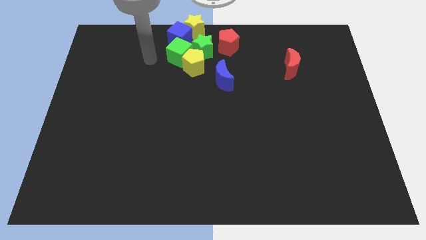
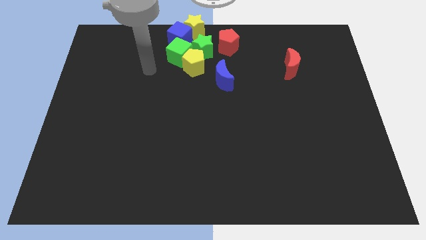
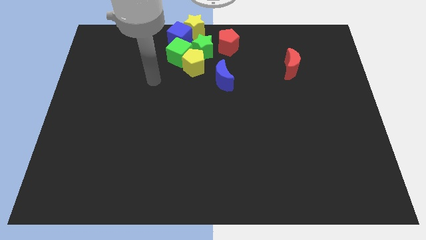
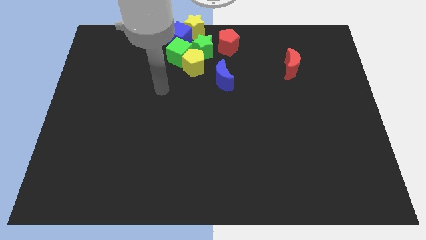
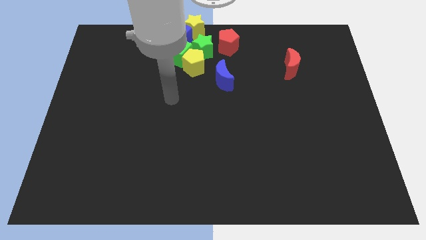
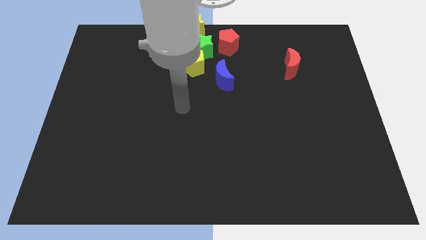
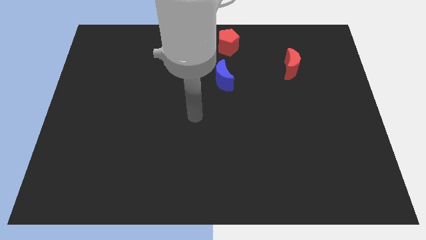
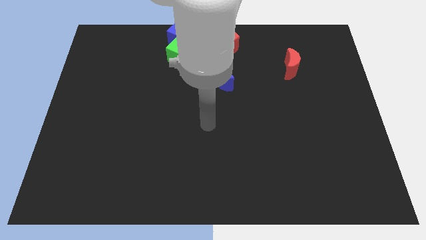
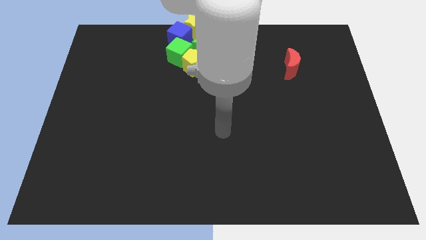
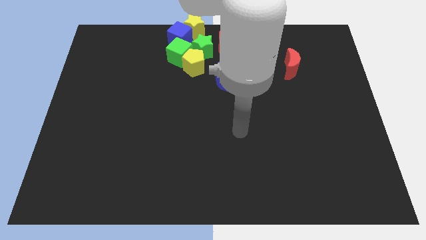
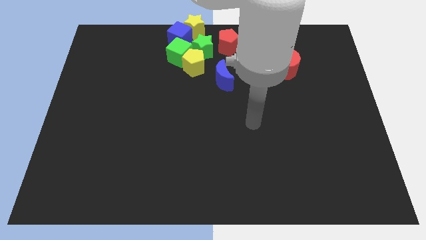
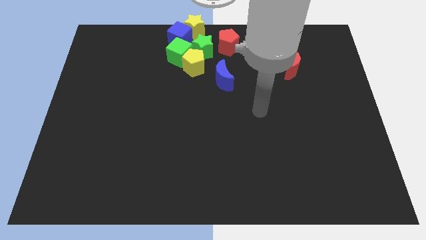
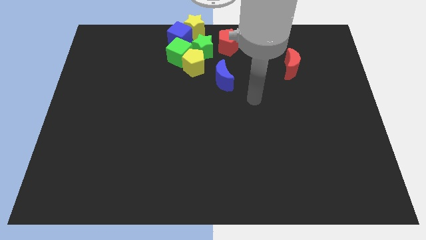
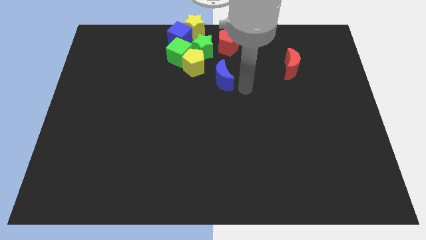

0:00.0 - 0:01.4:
move your arm away from the green cube

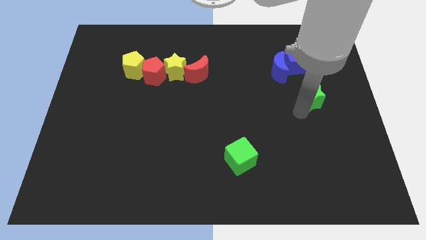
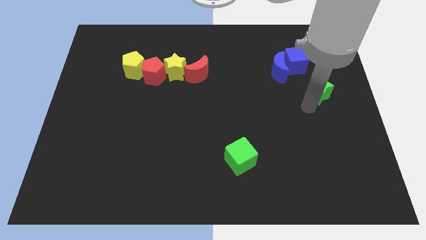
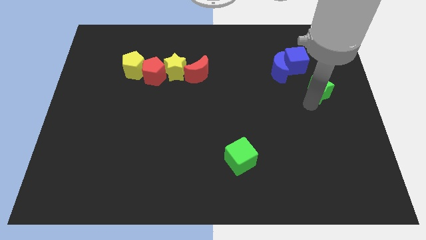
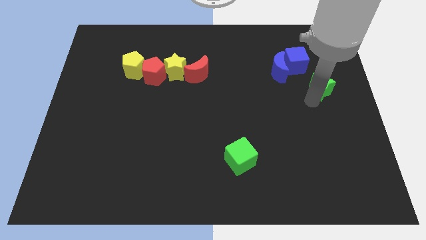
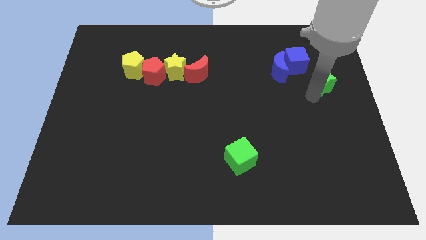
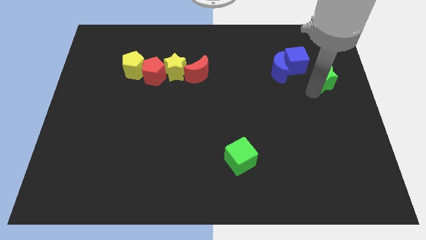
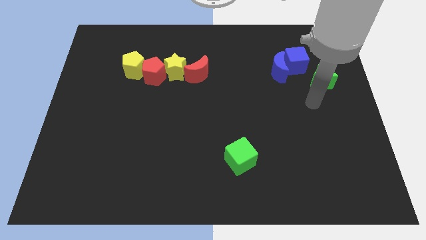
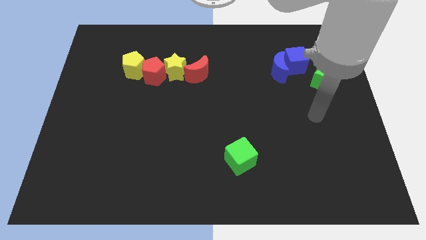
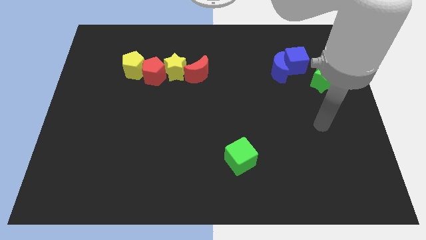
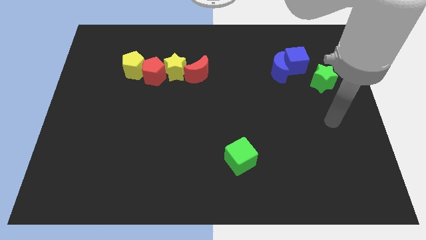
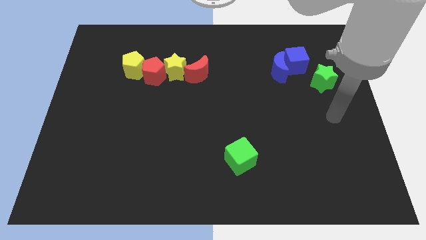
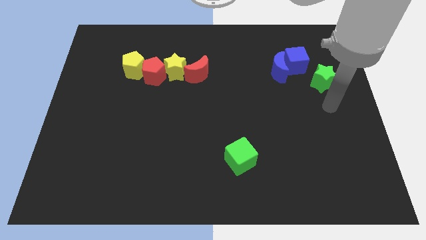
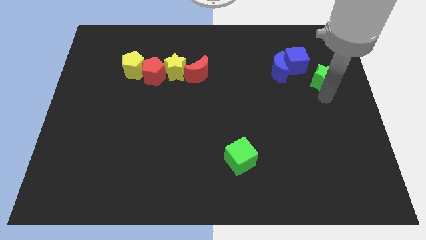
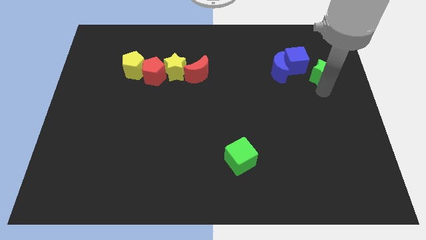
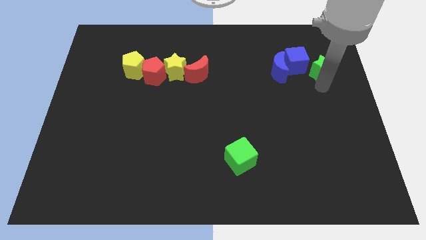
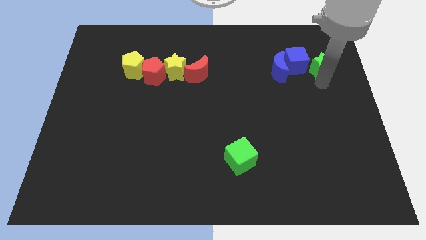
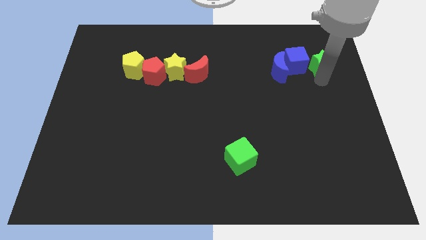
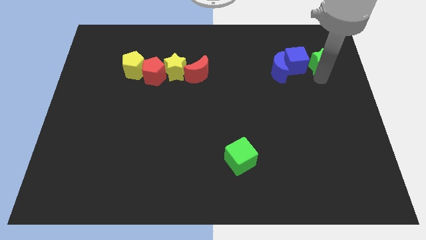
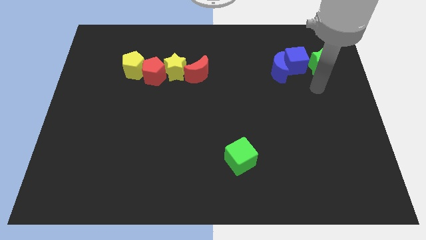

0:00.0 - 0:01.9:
place green star beside blue cube

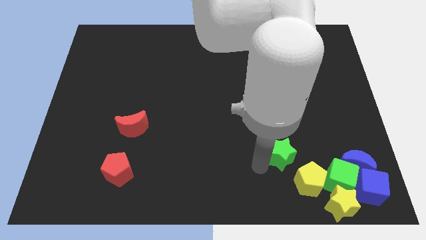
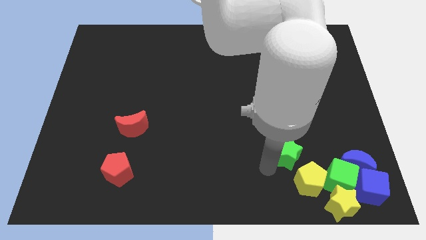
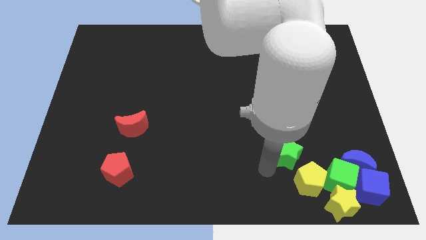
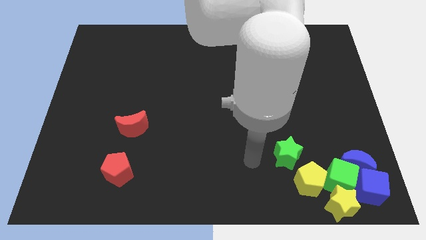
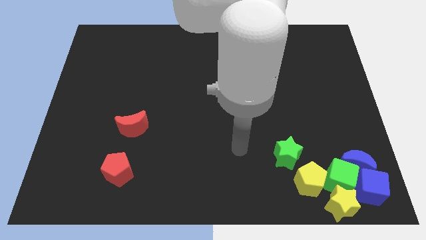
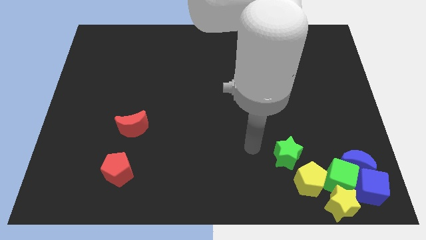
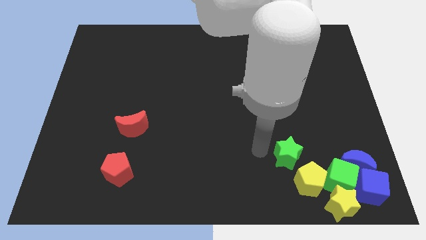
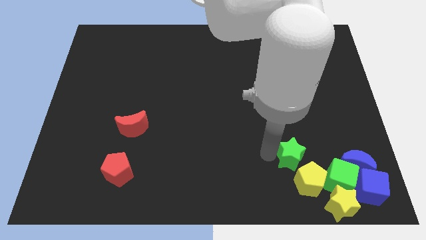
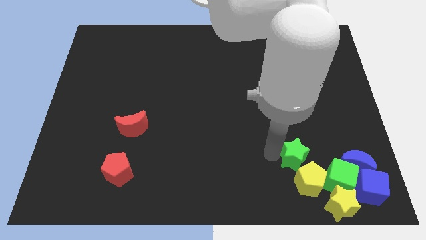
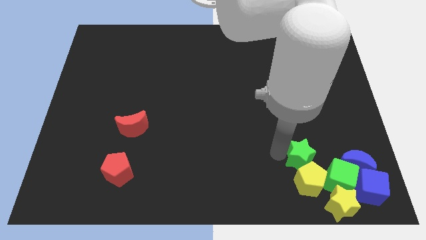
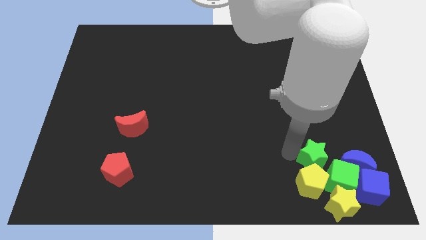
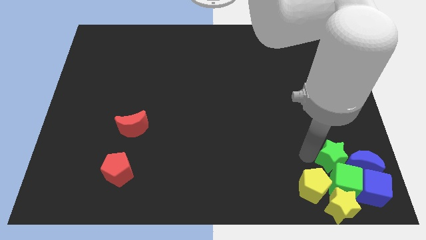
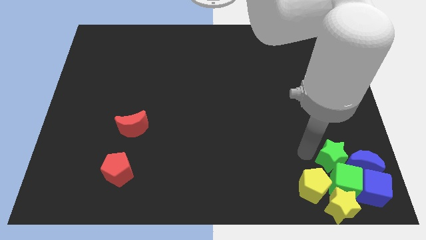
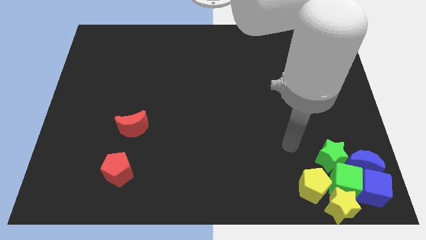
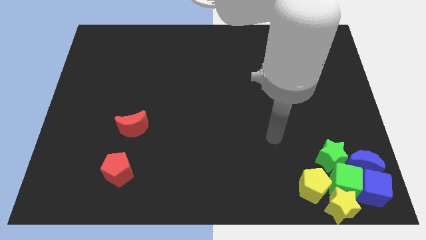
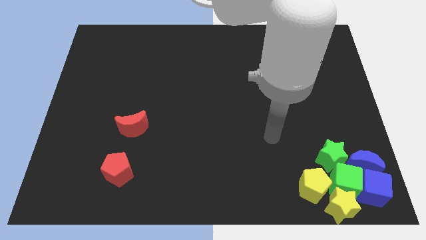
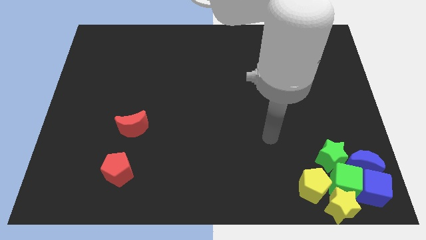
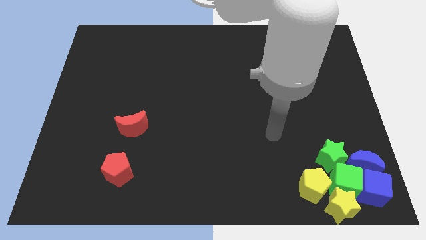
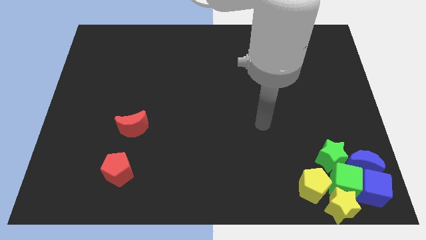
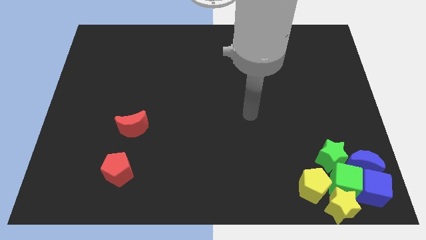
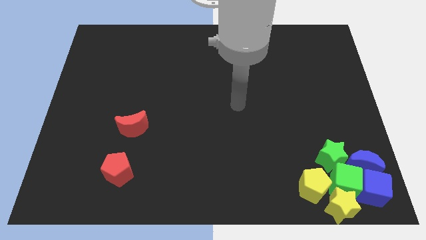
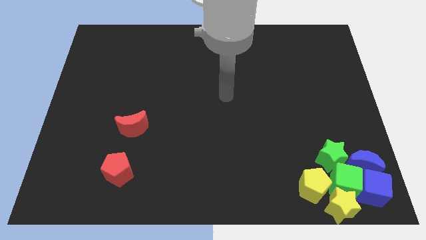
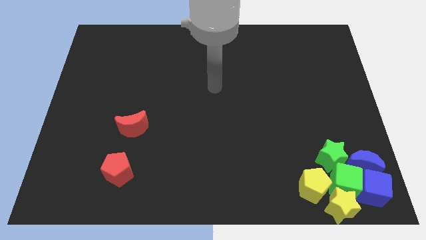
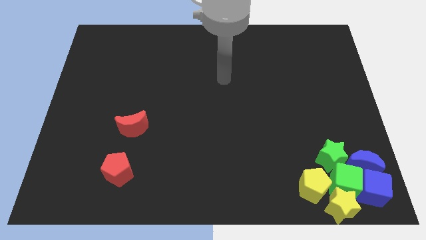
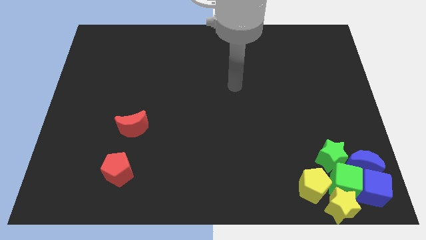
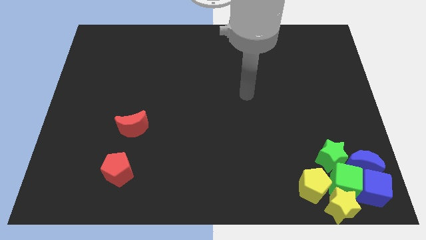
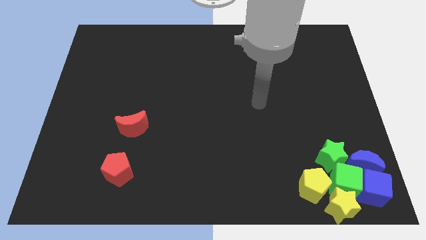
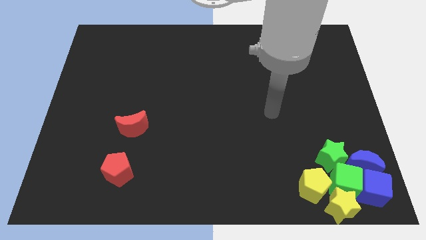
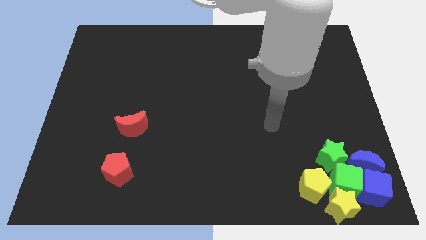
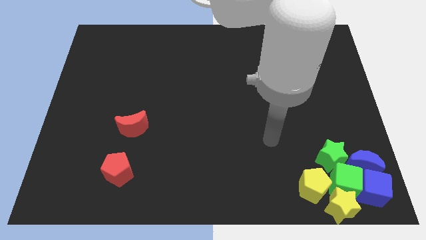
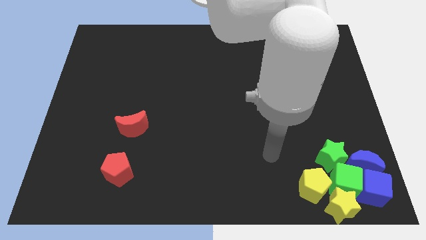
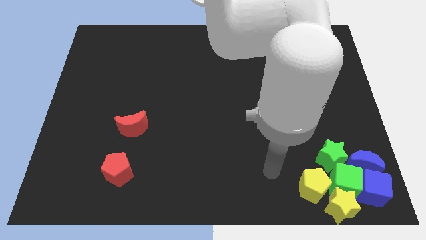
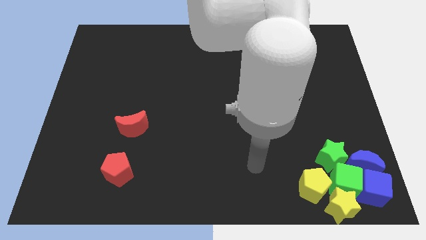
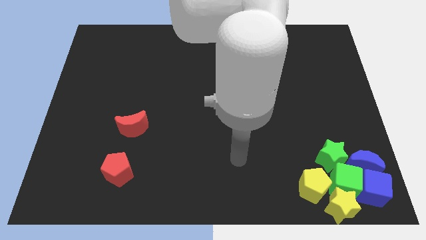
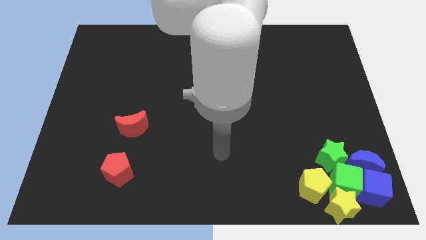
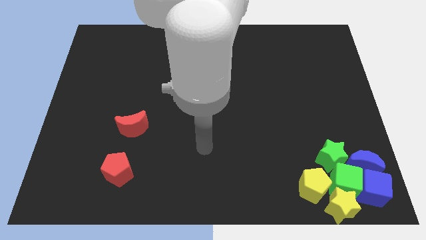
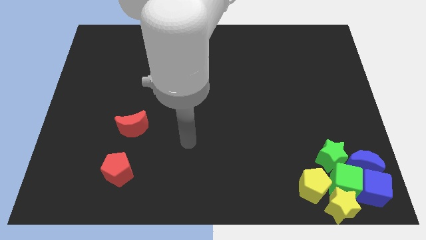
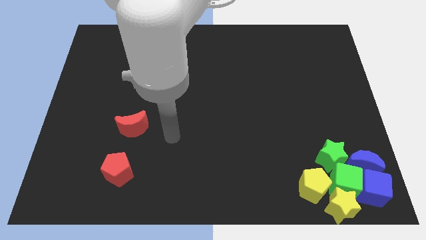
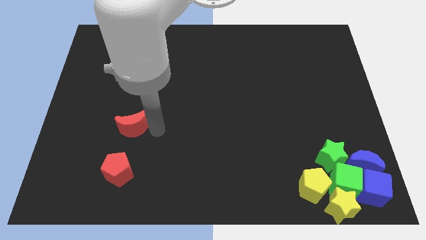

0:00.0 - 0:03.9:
move the green star into the top of green cube

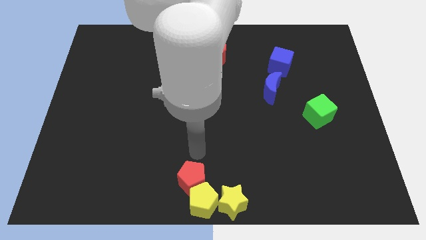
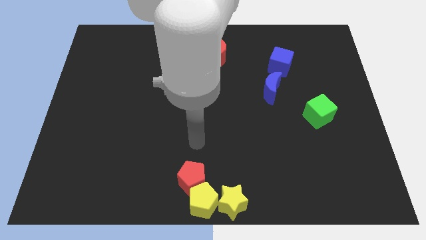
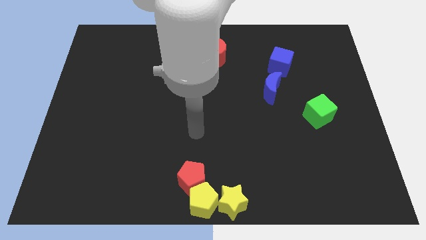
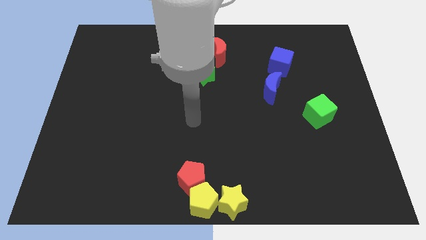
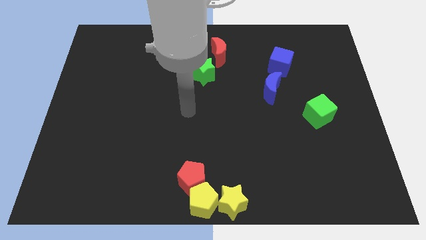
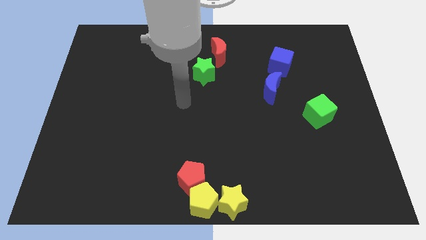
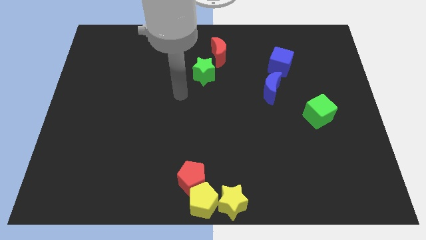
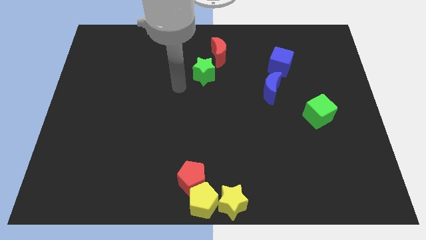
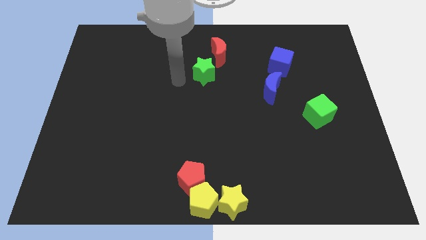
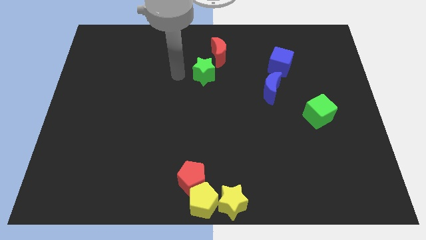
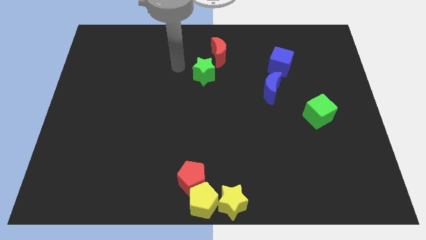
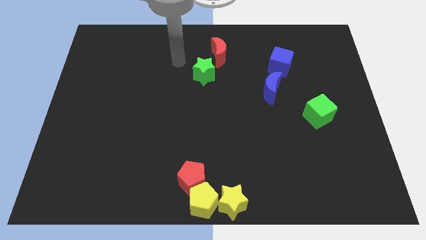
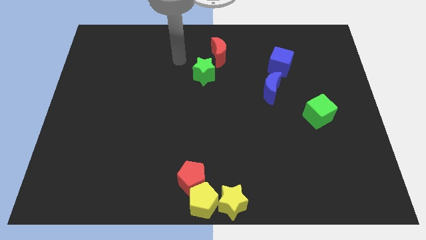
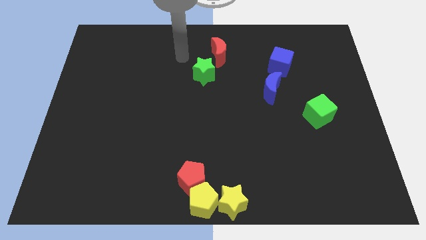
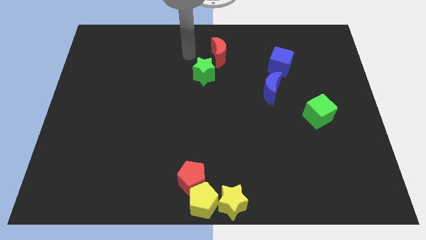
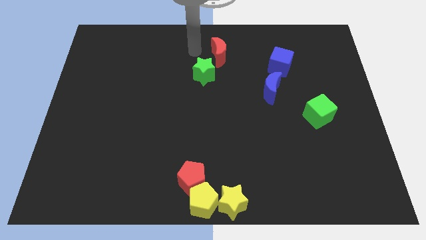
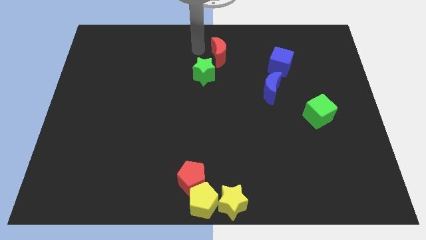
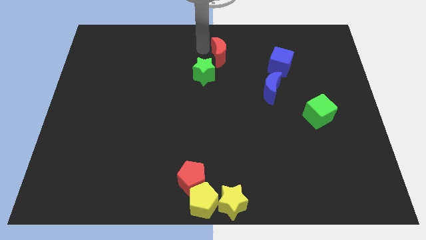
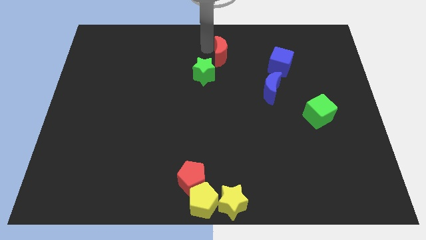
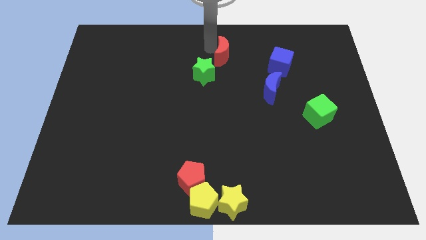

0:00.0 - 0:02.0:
tap the red crescent
